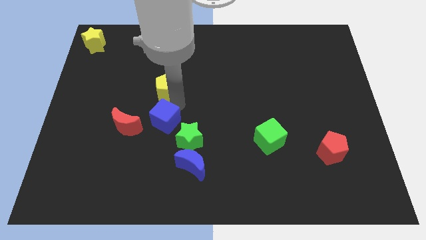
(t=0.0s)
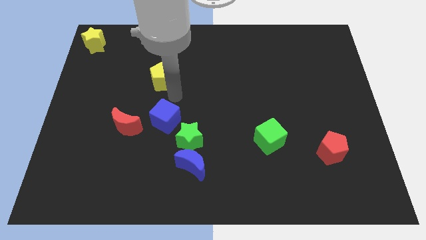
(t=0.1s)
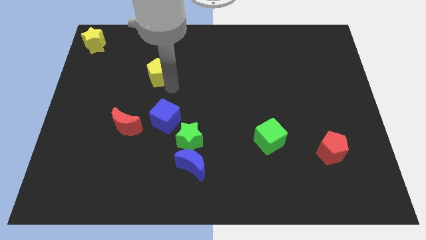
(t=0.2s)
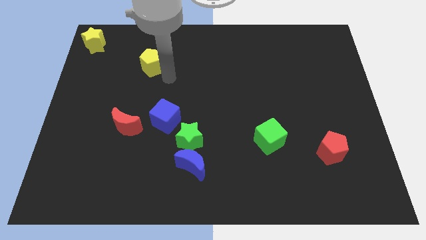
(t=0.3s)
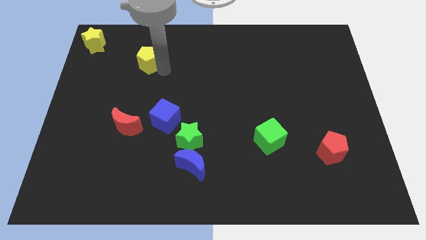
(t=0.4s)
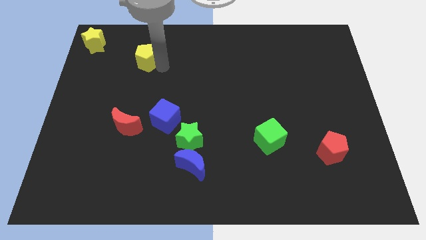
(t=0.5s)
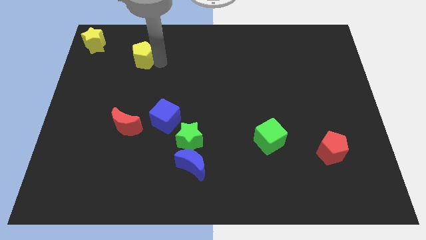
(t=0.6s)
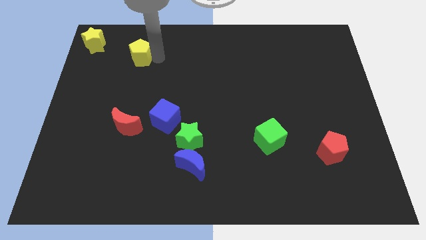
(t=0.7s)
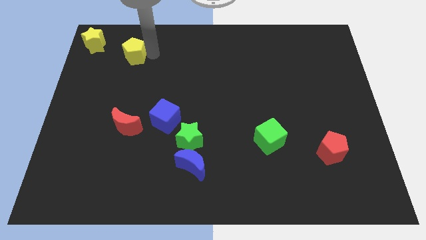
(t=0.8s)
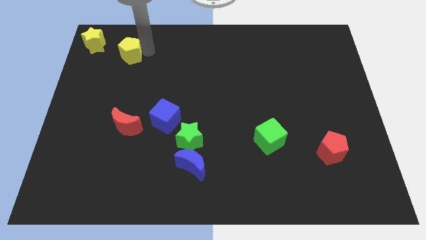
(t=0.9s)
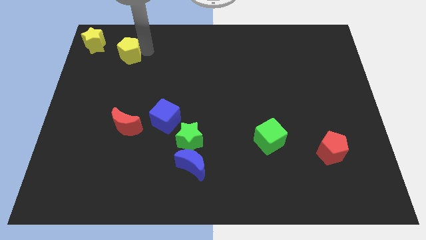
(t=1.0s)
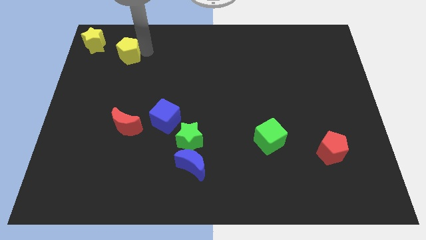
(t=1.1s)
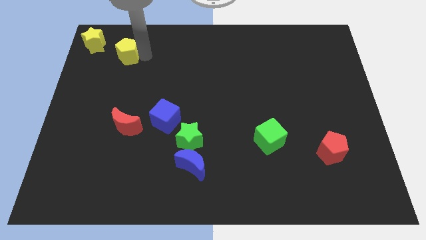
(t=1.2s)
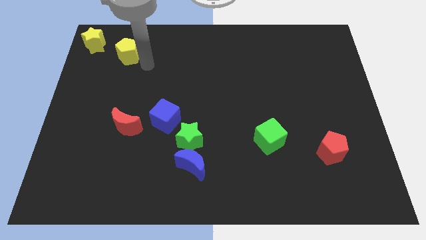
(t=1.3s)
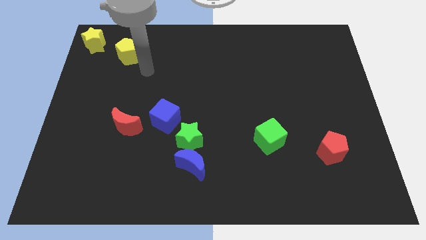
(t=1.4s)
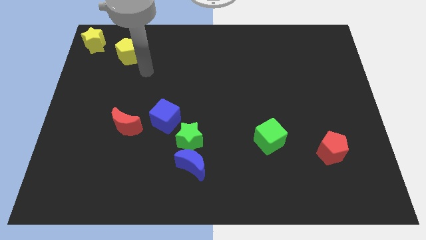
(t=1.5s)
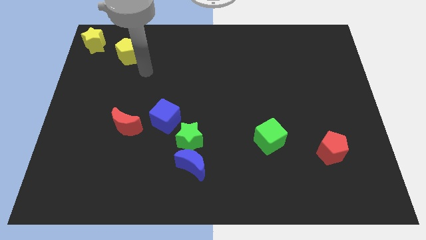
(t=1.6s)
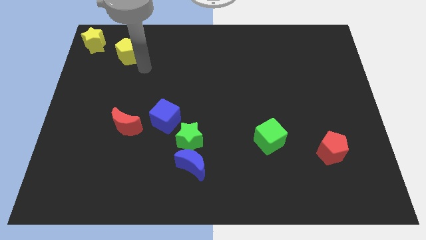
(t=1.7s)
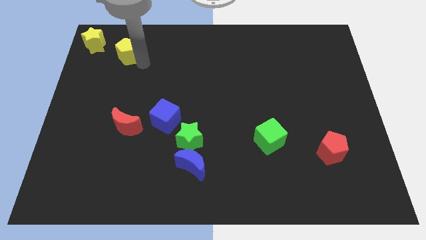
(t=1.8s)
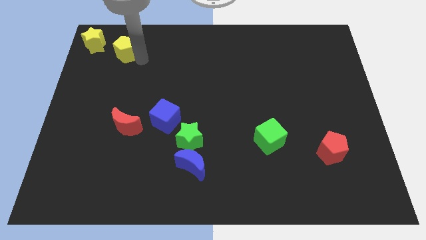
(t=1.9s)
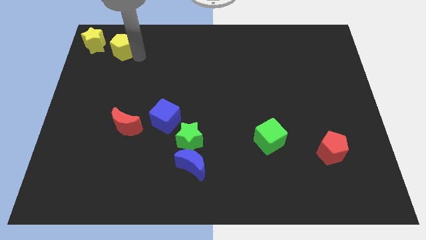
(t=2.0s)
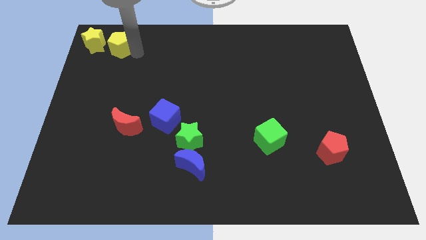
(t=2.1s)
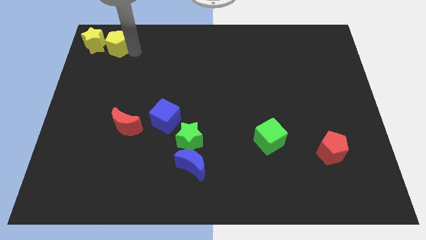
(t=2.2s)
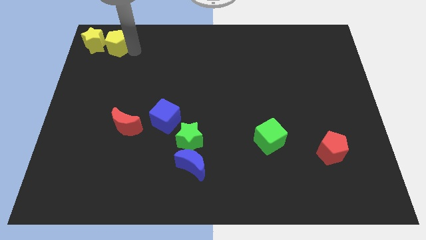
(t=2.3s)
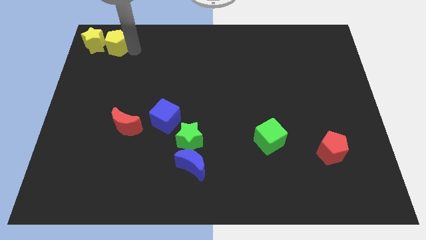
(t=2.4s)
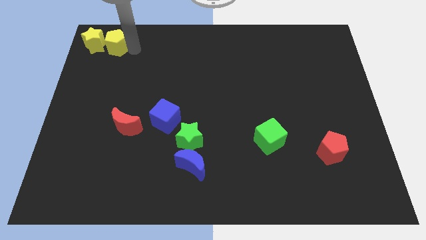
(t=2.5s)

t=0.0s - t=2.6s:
place the yellow pentagon to the right side of the yellow star

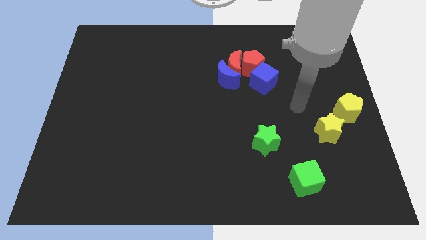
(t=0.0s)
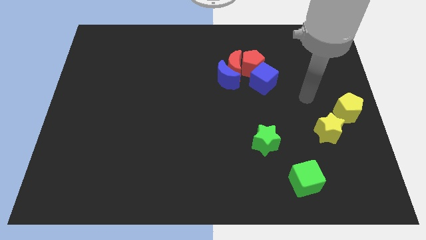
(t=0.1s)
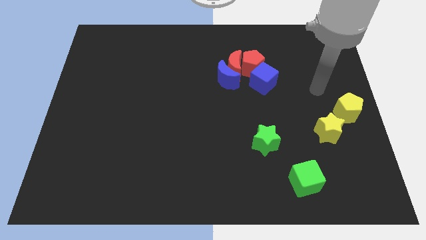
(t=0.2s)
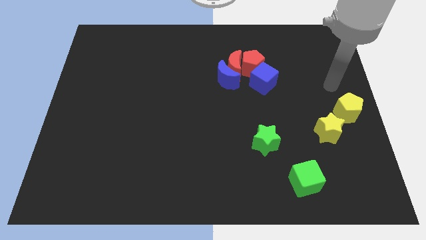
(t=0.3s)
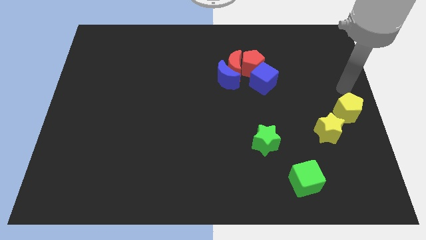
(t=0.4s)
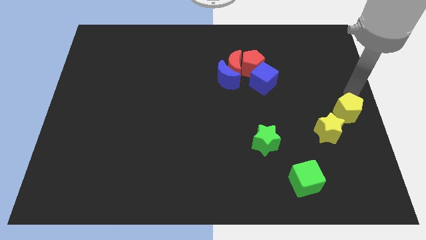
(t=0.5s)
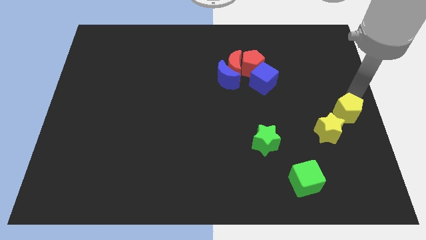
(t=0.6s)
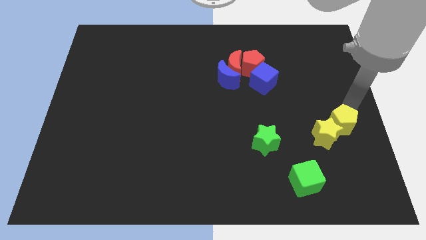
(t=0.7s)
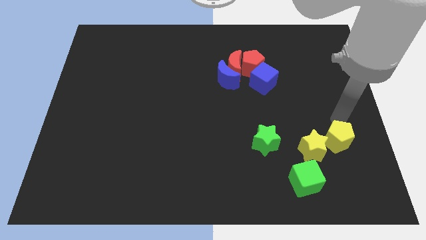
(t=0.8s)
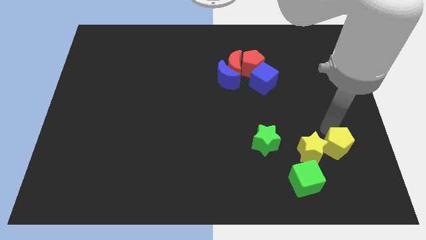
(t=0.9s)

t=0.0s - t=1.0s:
push the yellow pentagon into yellow star

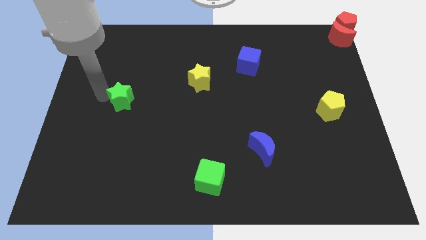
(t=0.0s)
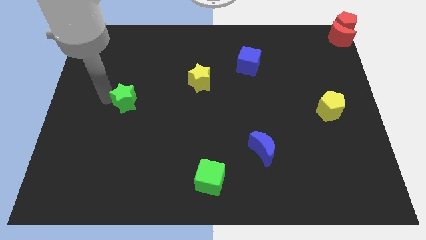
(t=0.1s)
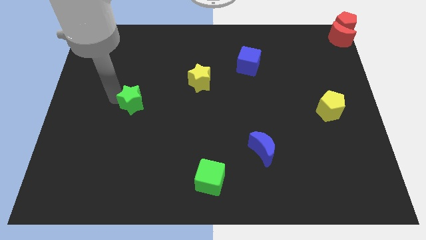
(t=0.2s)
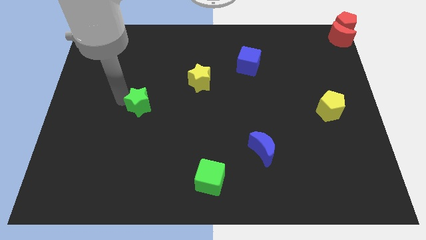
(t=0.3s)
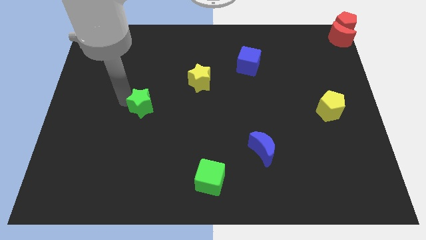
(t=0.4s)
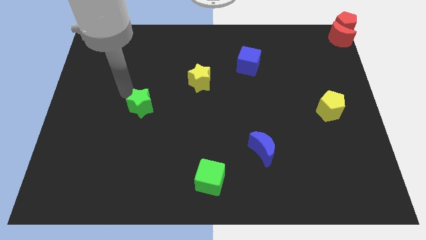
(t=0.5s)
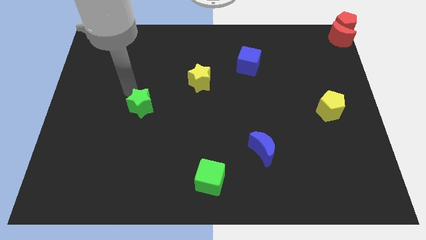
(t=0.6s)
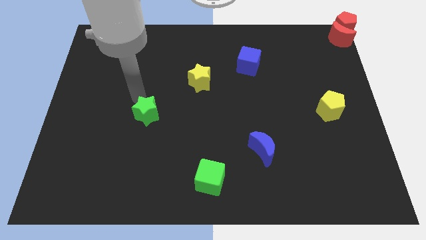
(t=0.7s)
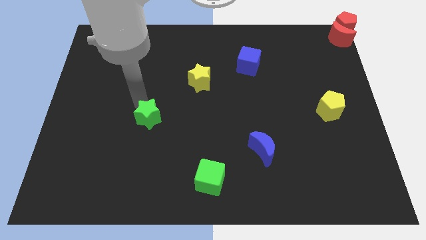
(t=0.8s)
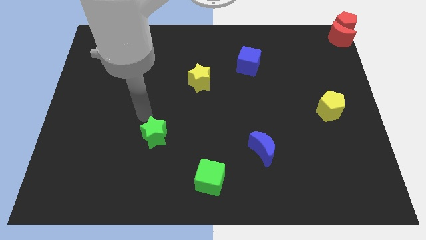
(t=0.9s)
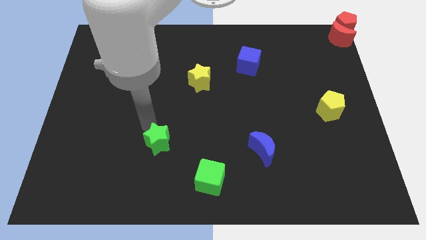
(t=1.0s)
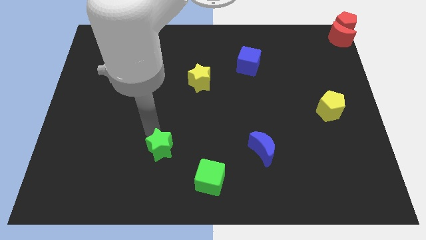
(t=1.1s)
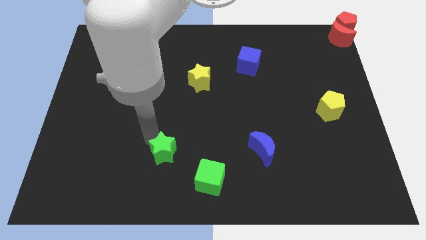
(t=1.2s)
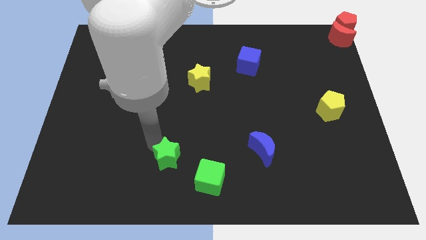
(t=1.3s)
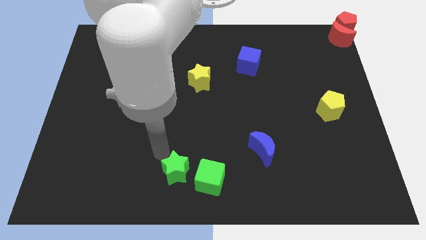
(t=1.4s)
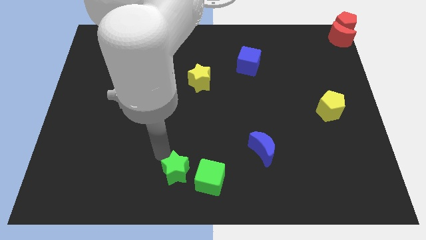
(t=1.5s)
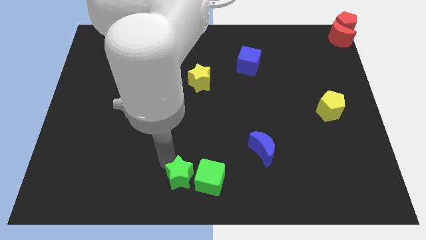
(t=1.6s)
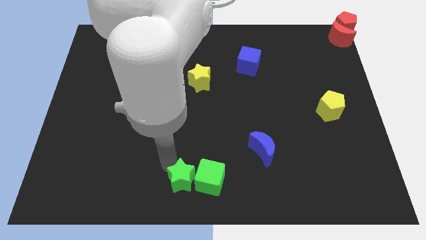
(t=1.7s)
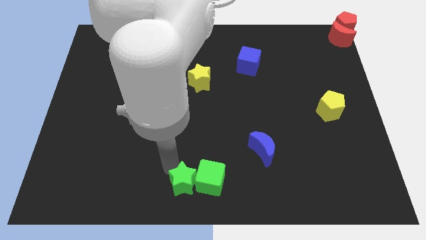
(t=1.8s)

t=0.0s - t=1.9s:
move the green star to the left side of the green cube

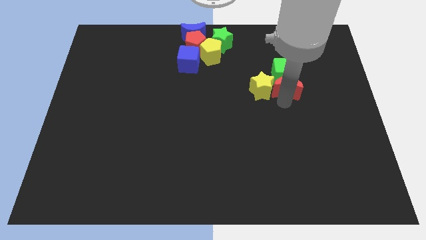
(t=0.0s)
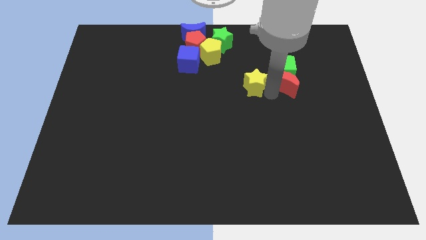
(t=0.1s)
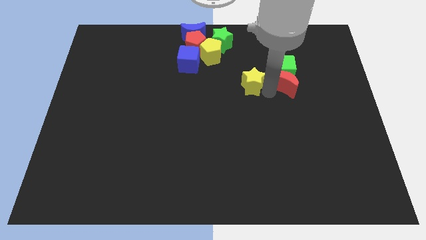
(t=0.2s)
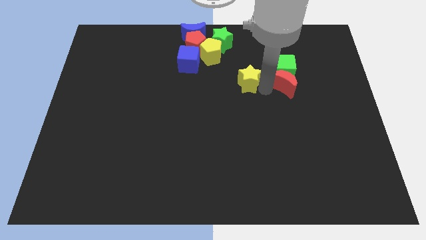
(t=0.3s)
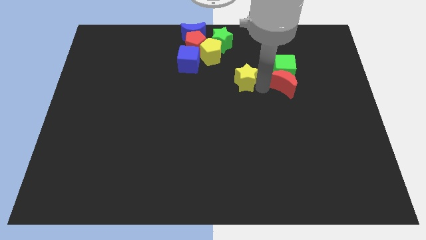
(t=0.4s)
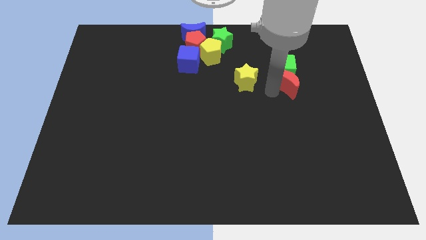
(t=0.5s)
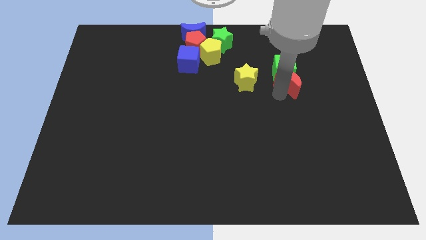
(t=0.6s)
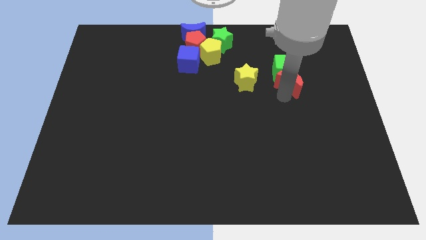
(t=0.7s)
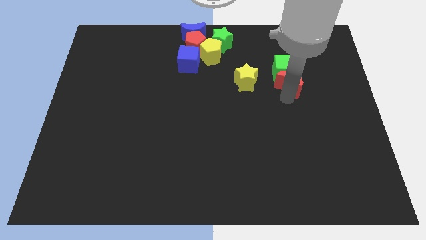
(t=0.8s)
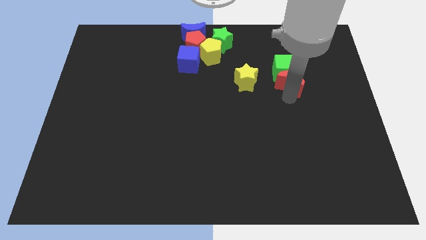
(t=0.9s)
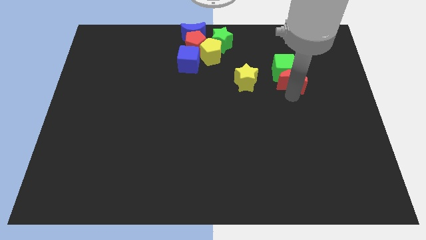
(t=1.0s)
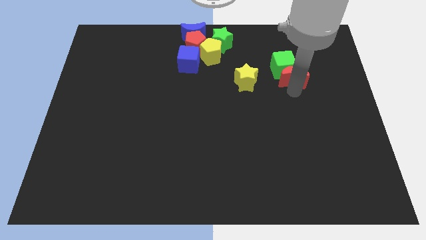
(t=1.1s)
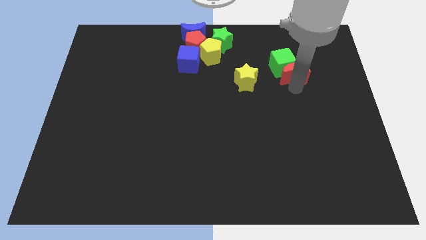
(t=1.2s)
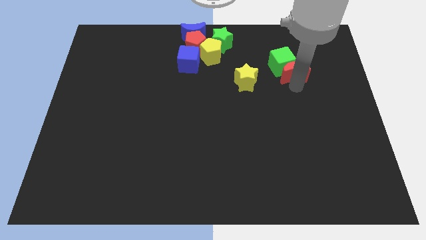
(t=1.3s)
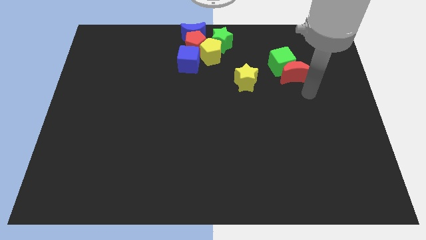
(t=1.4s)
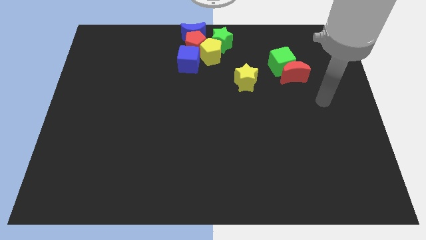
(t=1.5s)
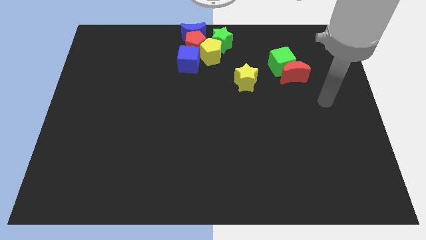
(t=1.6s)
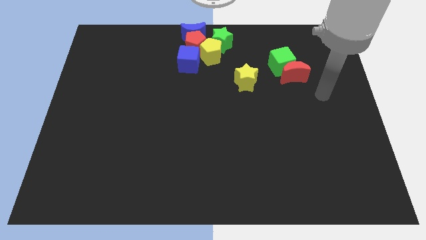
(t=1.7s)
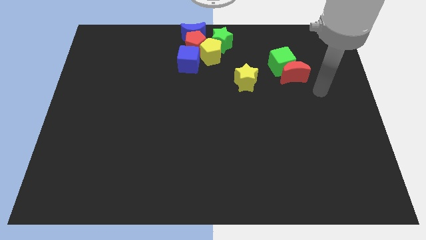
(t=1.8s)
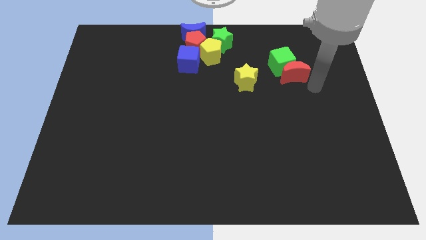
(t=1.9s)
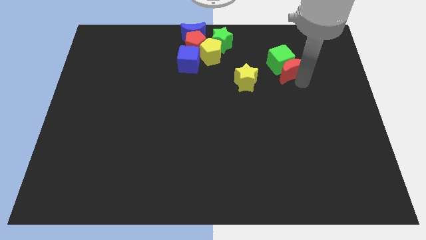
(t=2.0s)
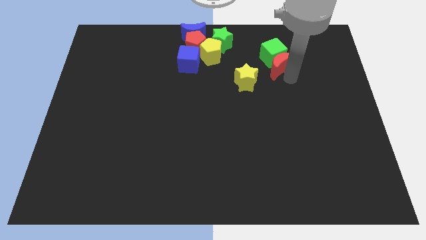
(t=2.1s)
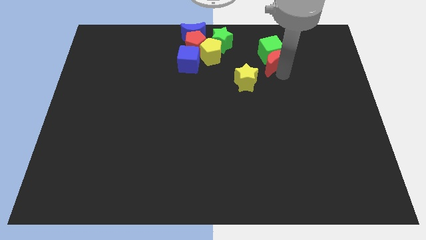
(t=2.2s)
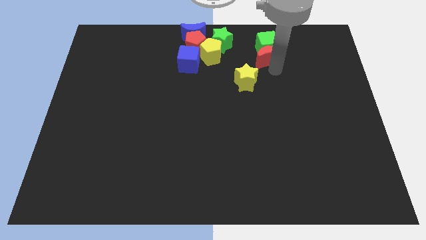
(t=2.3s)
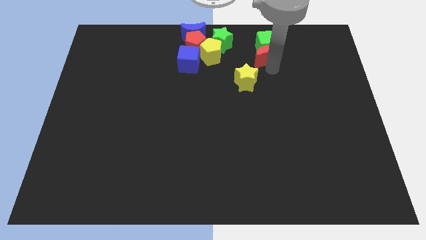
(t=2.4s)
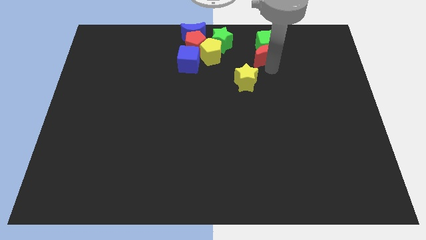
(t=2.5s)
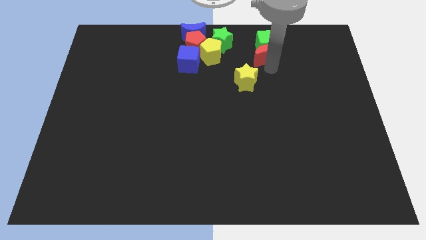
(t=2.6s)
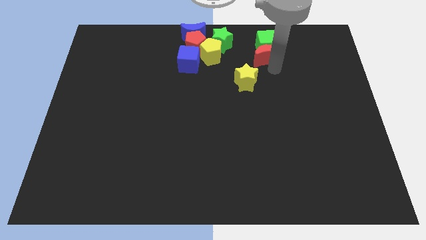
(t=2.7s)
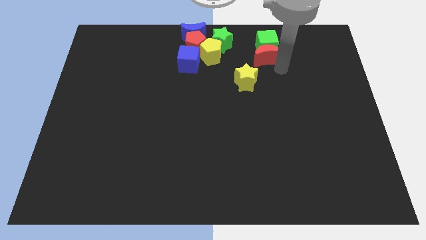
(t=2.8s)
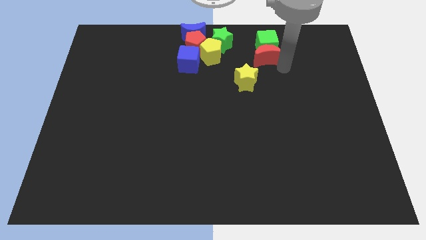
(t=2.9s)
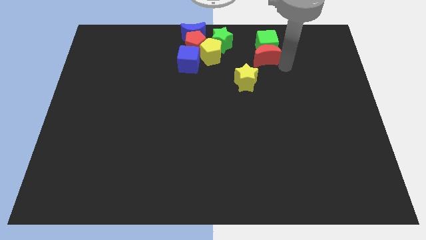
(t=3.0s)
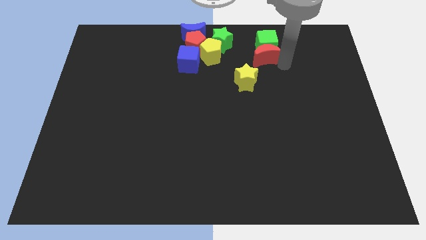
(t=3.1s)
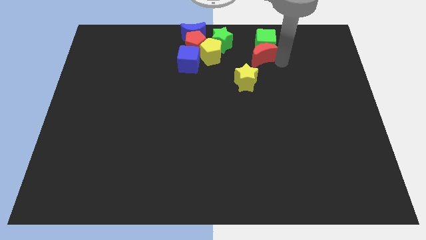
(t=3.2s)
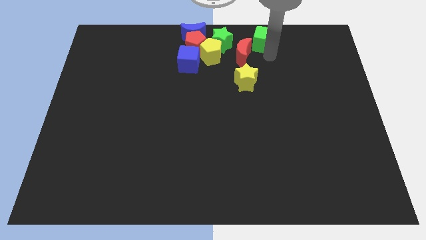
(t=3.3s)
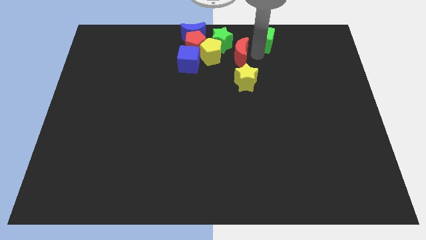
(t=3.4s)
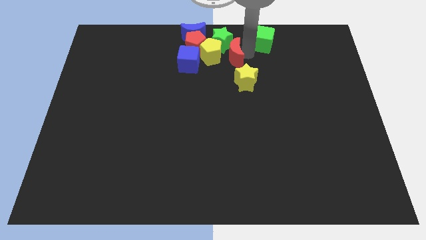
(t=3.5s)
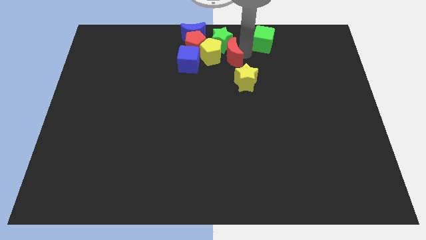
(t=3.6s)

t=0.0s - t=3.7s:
place red moon below green star
